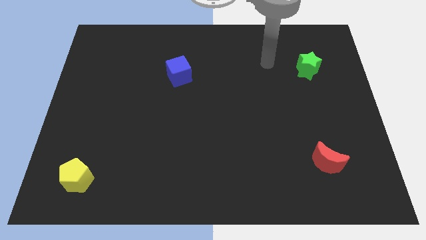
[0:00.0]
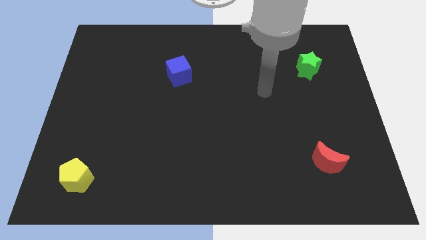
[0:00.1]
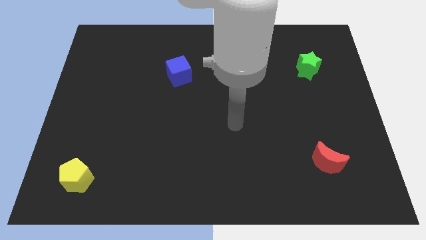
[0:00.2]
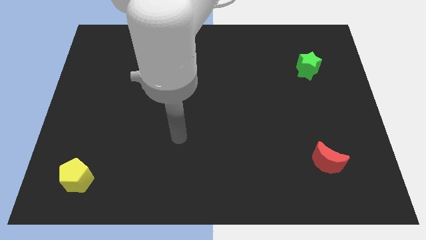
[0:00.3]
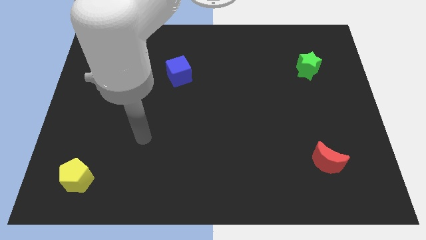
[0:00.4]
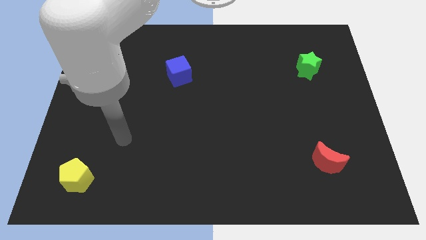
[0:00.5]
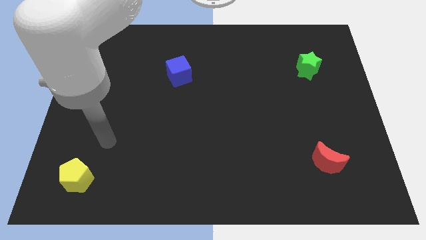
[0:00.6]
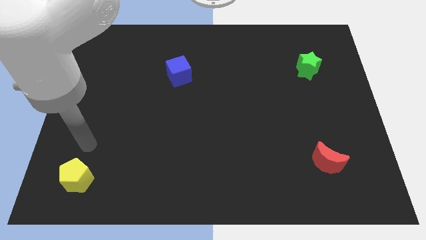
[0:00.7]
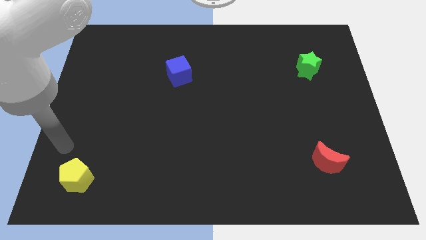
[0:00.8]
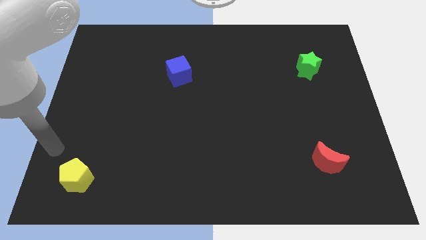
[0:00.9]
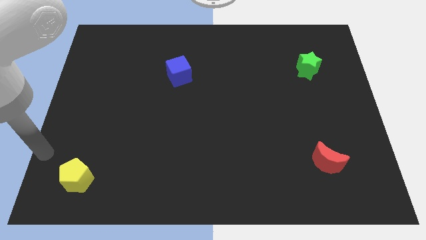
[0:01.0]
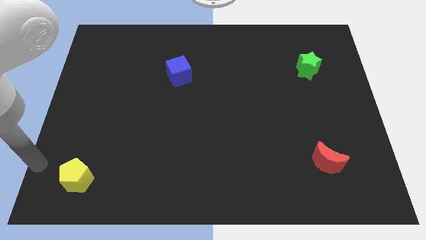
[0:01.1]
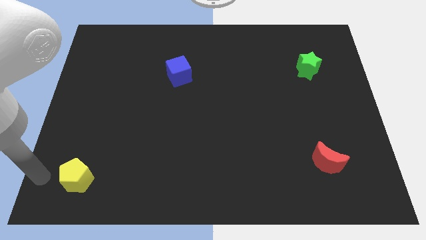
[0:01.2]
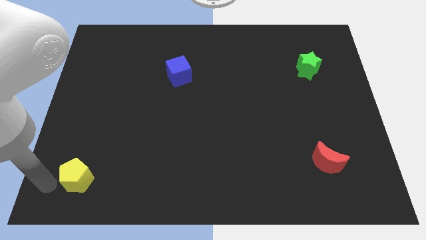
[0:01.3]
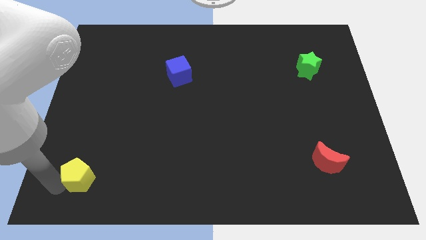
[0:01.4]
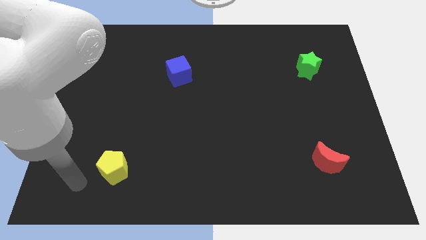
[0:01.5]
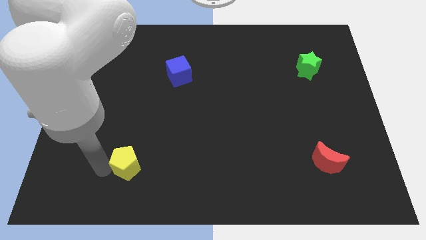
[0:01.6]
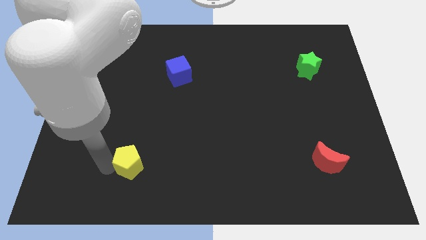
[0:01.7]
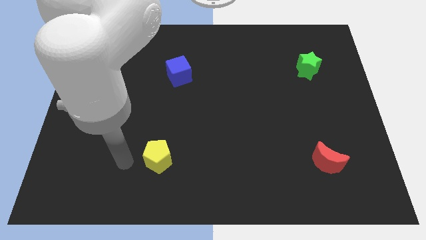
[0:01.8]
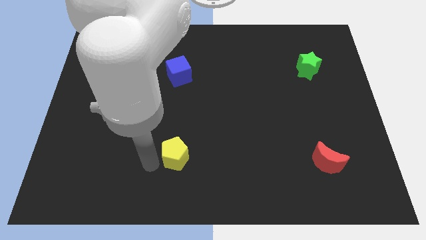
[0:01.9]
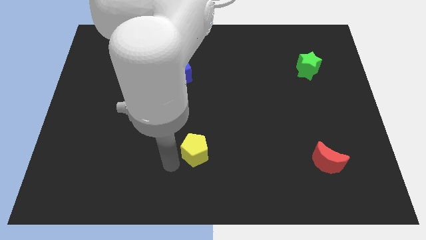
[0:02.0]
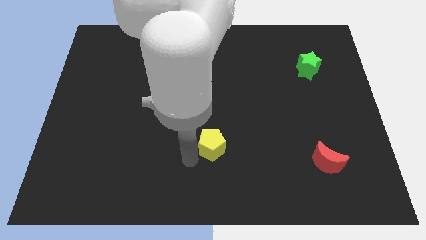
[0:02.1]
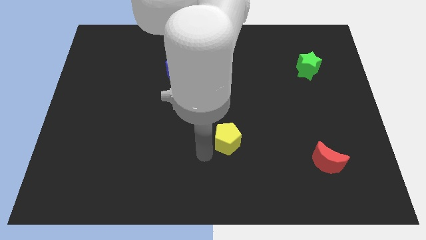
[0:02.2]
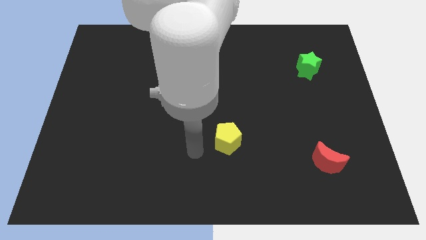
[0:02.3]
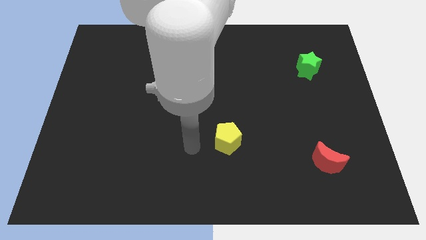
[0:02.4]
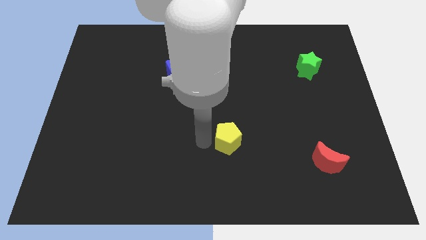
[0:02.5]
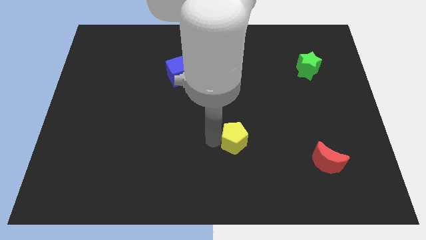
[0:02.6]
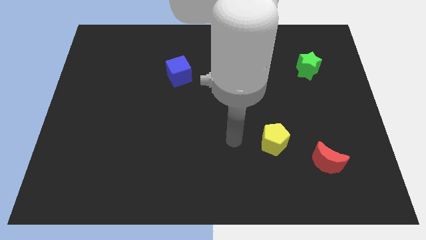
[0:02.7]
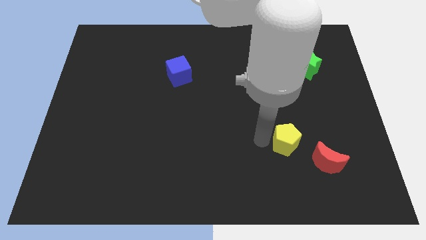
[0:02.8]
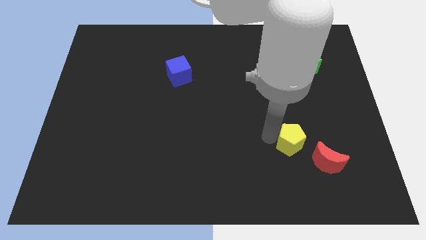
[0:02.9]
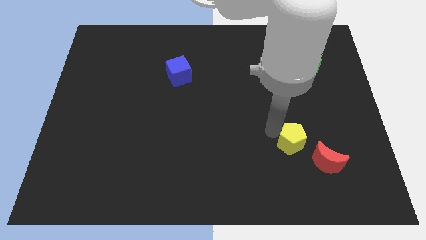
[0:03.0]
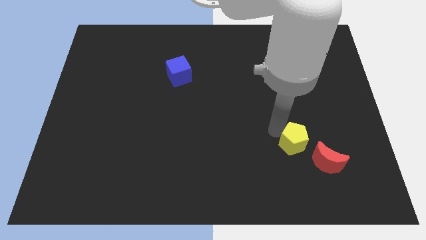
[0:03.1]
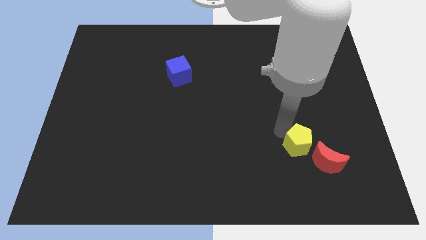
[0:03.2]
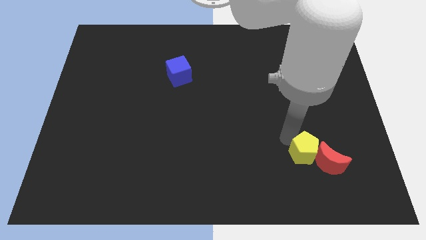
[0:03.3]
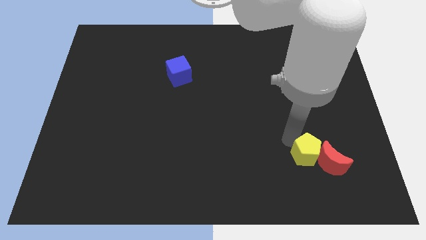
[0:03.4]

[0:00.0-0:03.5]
put the pentagon next to the moon

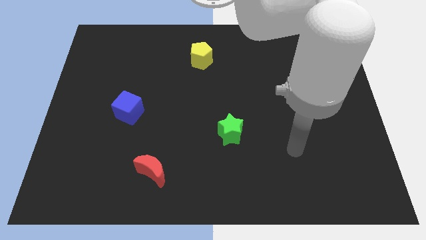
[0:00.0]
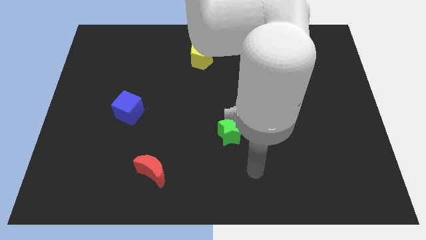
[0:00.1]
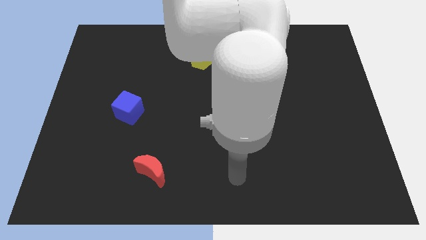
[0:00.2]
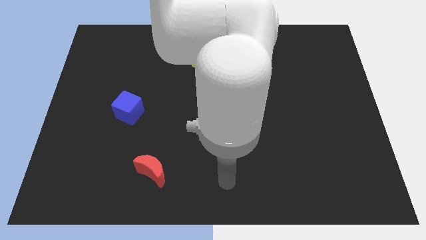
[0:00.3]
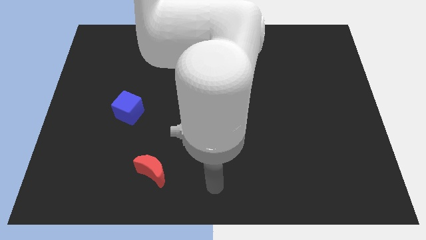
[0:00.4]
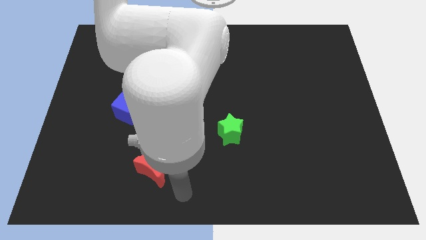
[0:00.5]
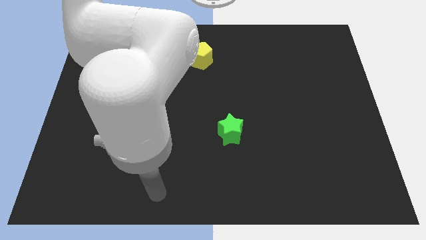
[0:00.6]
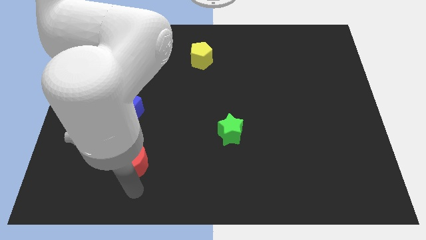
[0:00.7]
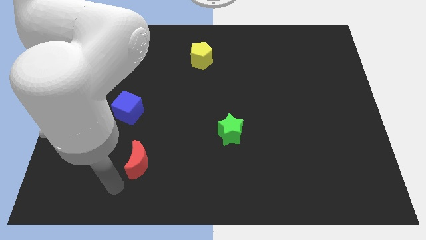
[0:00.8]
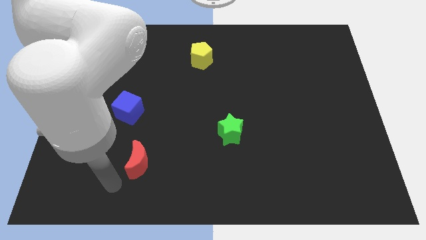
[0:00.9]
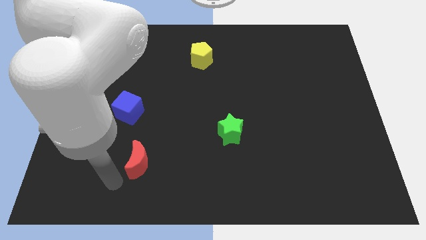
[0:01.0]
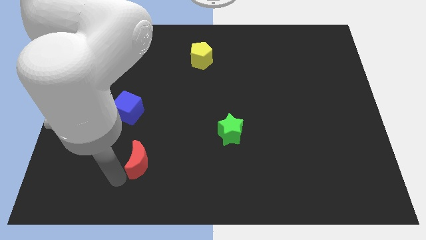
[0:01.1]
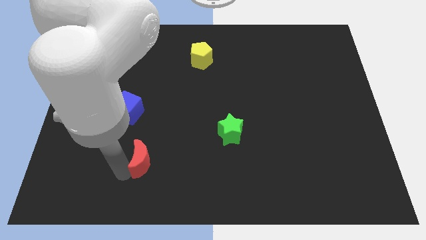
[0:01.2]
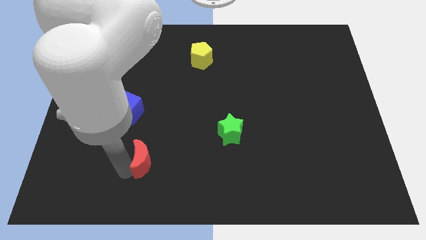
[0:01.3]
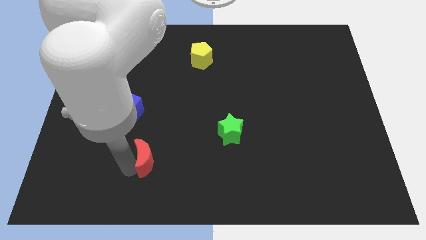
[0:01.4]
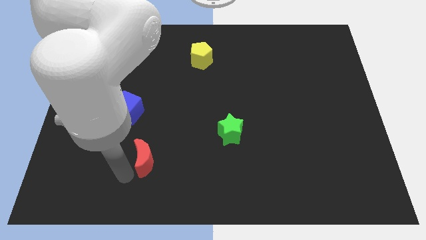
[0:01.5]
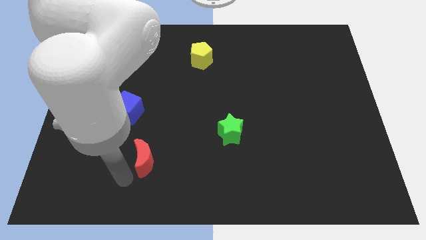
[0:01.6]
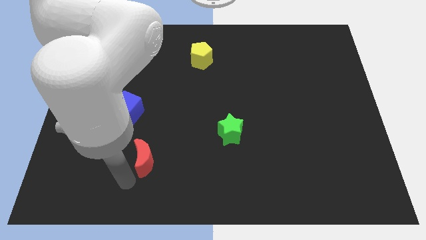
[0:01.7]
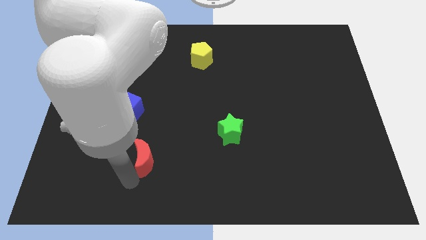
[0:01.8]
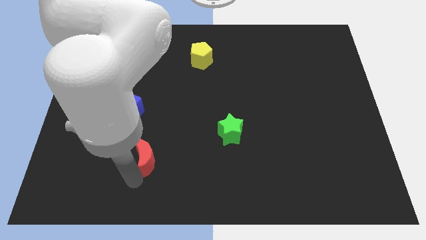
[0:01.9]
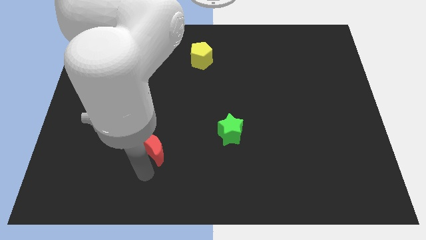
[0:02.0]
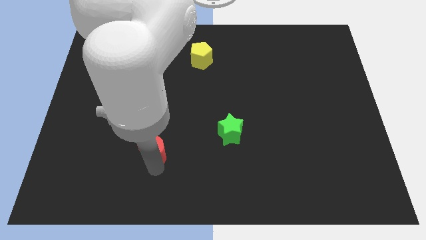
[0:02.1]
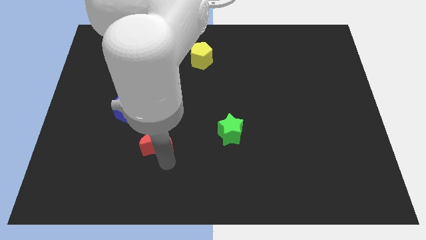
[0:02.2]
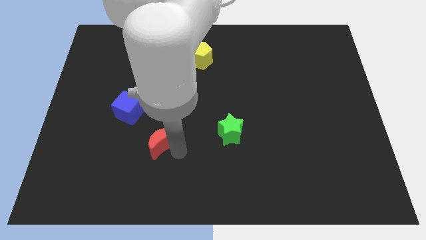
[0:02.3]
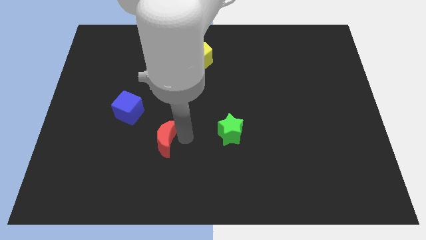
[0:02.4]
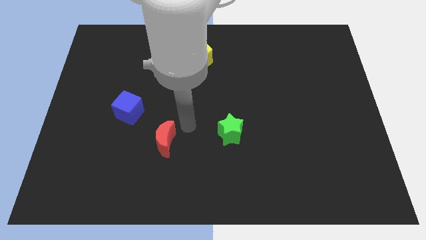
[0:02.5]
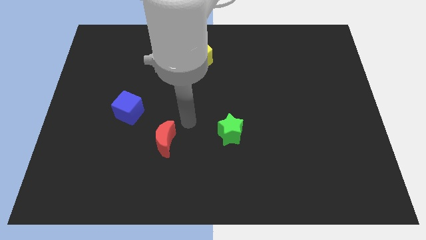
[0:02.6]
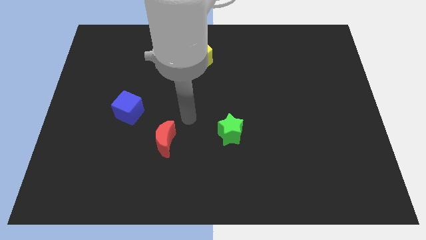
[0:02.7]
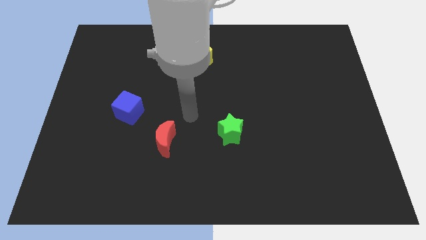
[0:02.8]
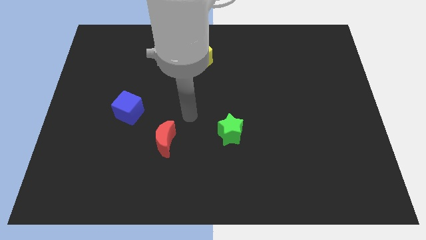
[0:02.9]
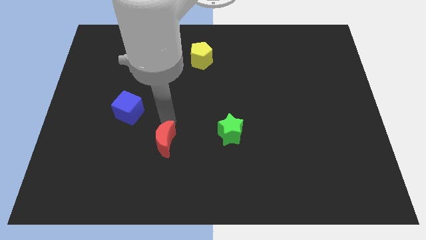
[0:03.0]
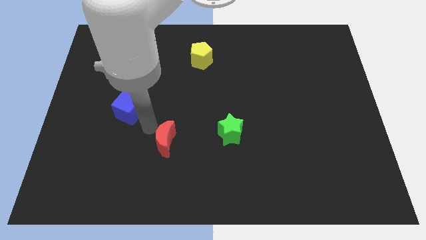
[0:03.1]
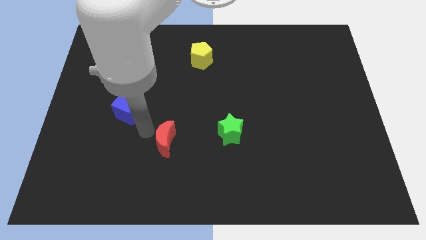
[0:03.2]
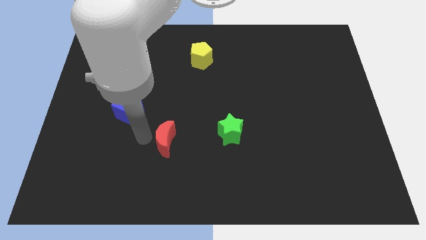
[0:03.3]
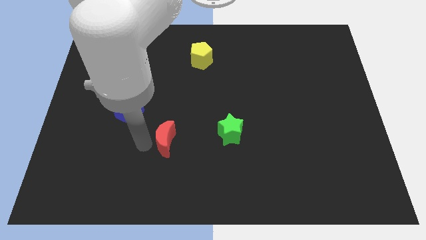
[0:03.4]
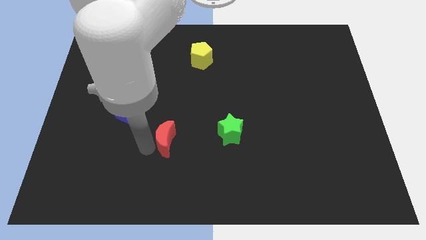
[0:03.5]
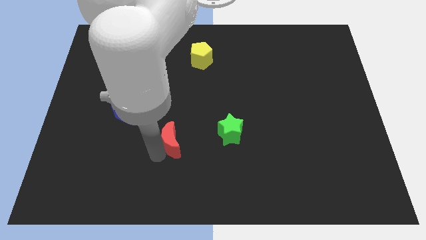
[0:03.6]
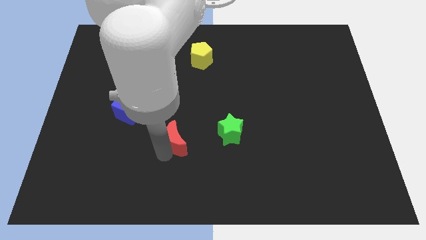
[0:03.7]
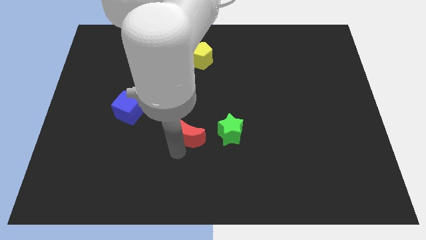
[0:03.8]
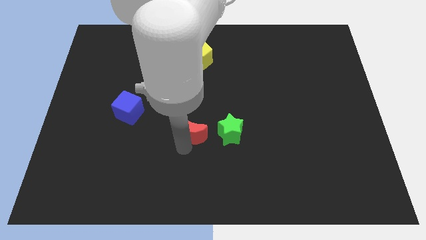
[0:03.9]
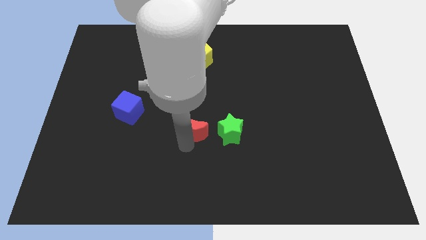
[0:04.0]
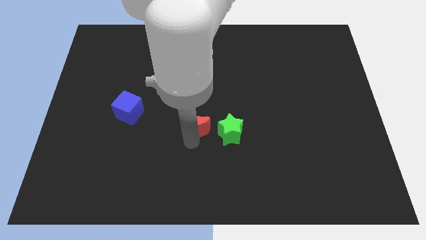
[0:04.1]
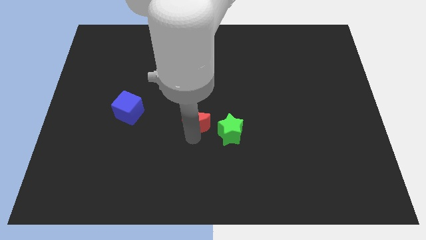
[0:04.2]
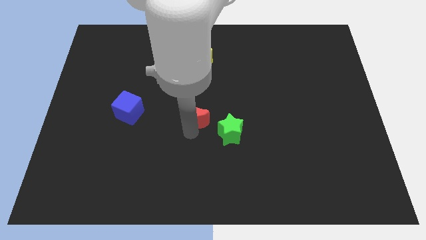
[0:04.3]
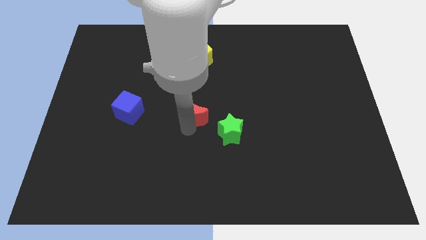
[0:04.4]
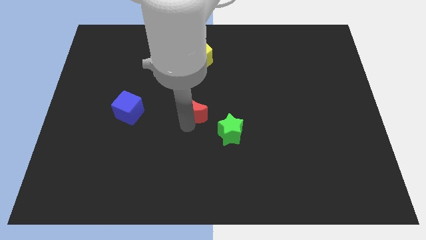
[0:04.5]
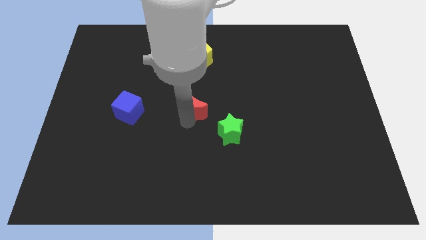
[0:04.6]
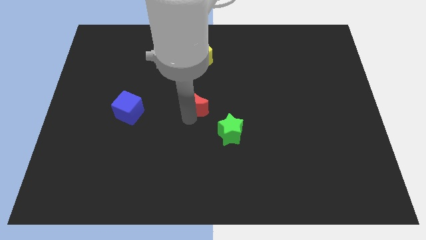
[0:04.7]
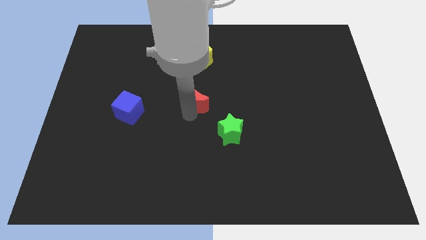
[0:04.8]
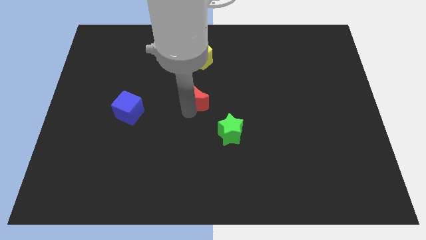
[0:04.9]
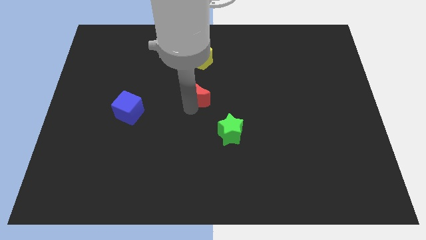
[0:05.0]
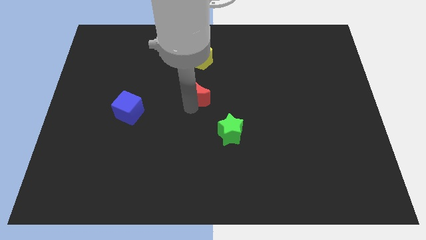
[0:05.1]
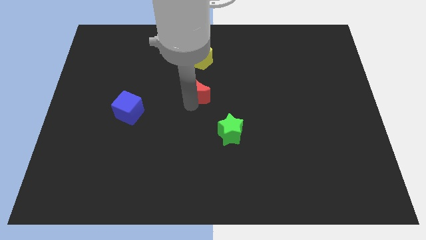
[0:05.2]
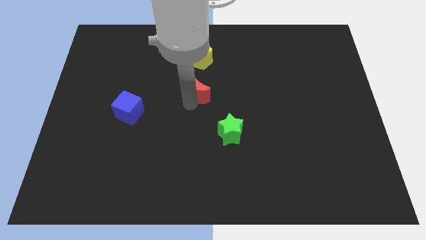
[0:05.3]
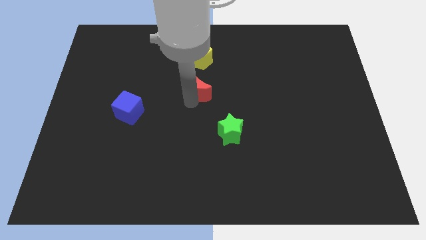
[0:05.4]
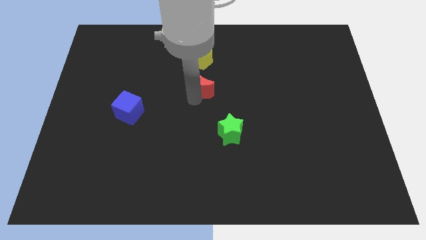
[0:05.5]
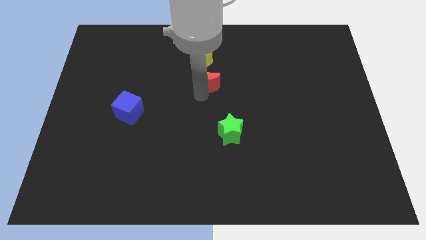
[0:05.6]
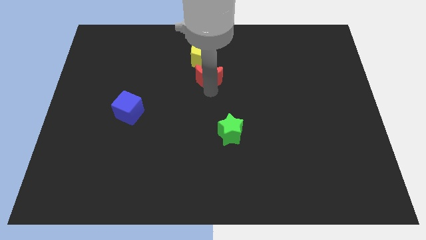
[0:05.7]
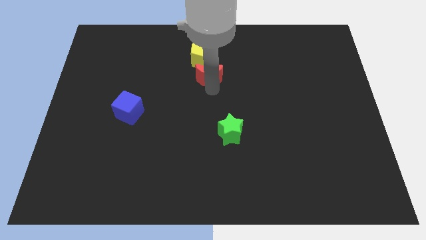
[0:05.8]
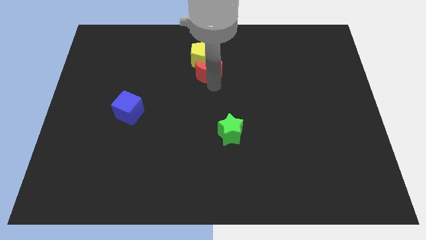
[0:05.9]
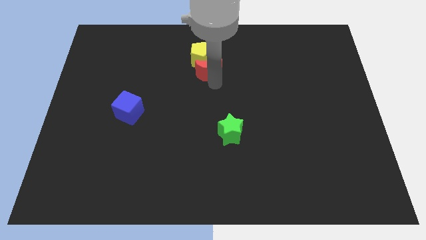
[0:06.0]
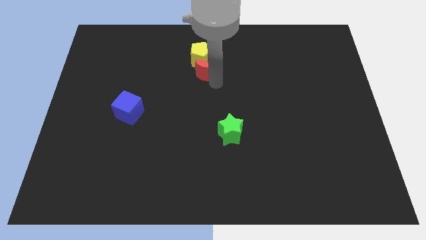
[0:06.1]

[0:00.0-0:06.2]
move the moon to the yellow pentagon
